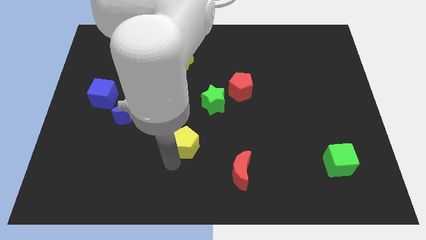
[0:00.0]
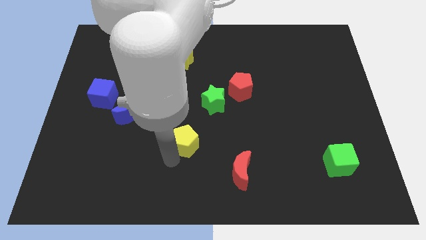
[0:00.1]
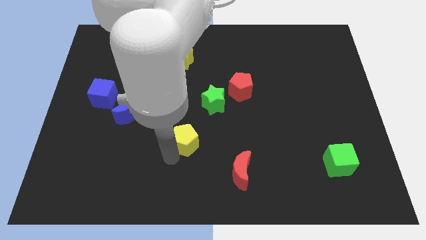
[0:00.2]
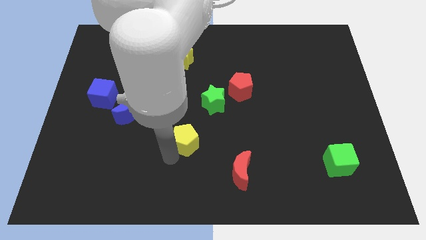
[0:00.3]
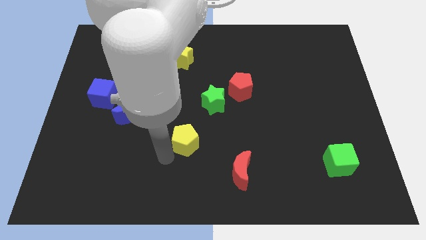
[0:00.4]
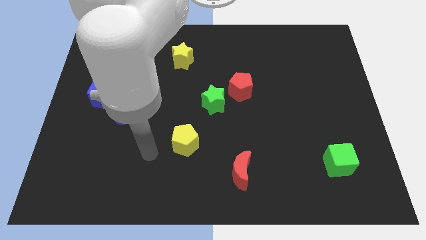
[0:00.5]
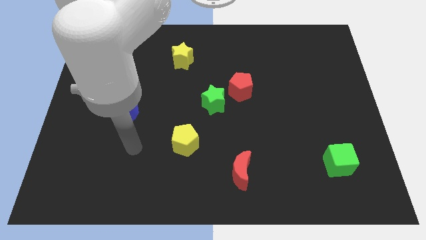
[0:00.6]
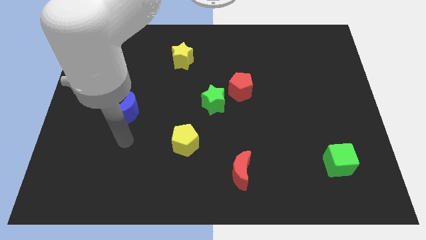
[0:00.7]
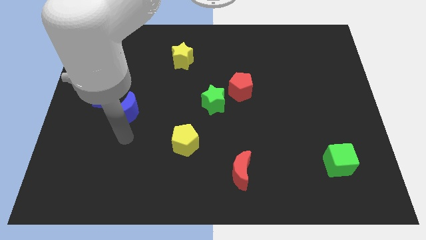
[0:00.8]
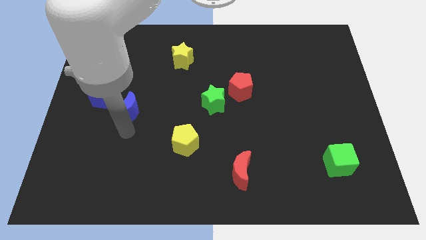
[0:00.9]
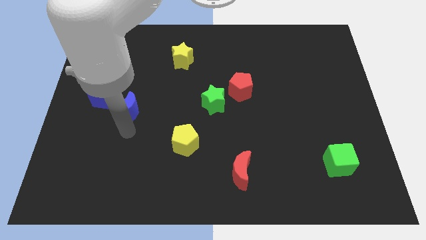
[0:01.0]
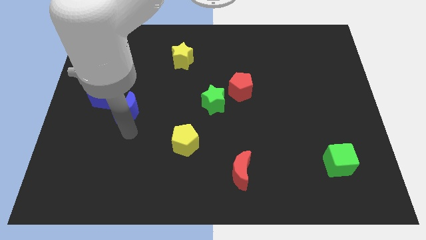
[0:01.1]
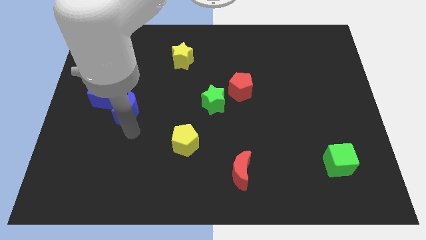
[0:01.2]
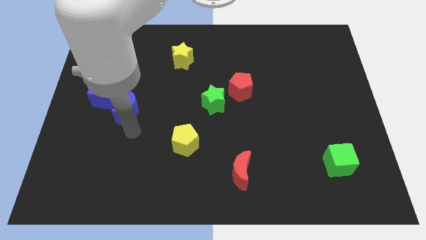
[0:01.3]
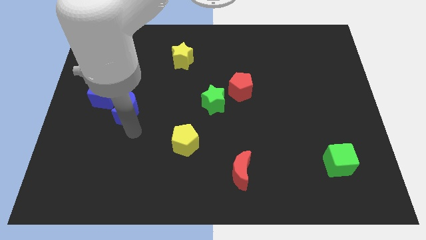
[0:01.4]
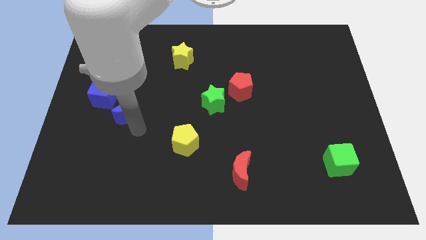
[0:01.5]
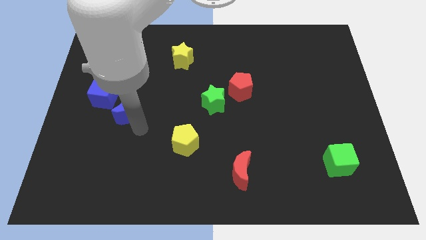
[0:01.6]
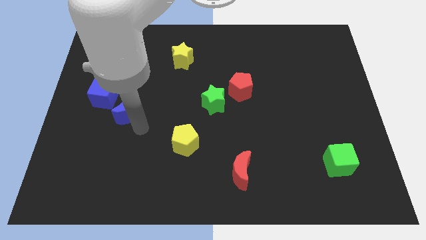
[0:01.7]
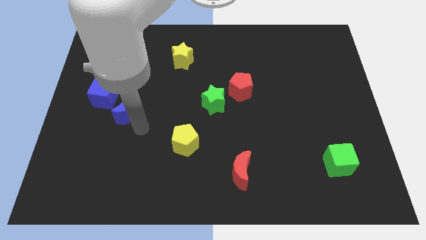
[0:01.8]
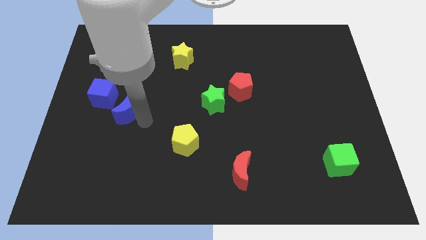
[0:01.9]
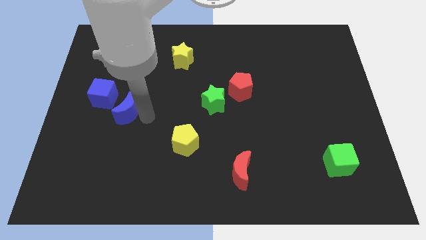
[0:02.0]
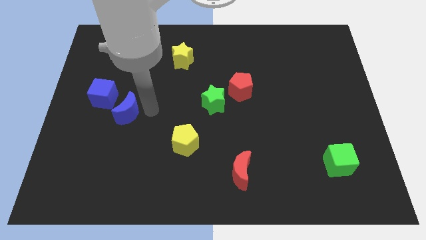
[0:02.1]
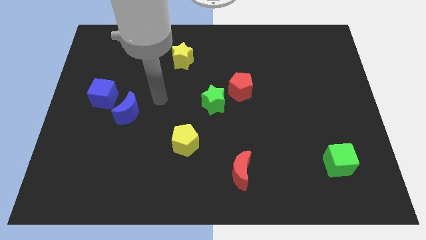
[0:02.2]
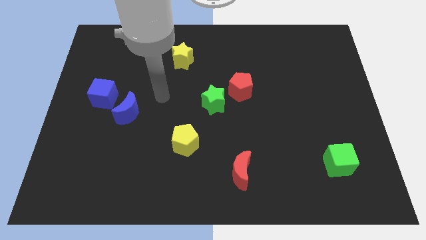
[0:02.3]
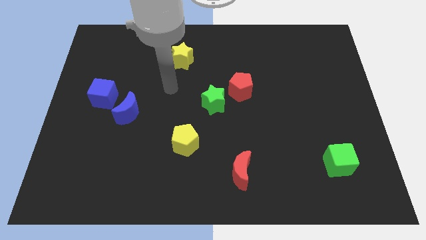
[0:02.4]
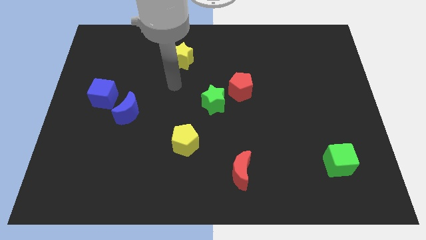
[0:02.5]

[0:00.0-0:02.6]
slightly touch the yellow pentagon at the bottom

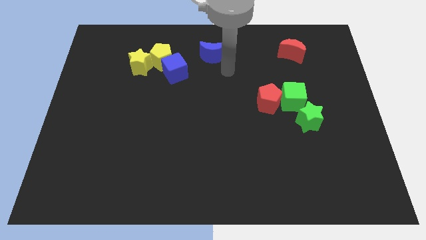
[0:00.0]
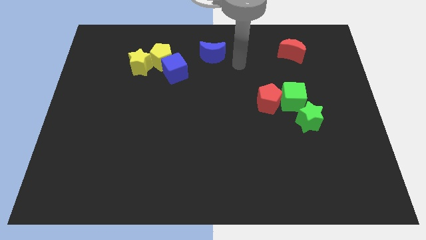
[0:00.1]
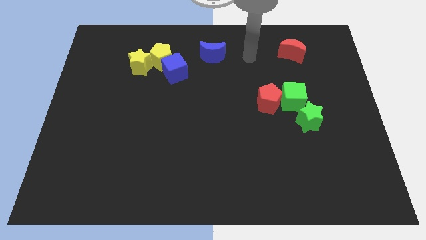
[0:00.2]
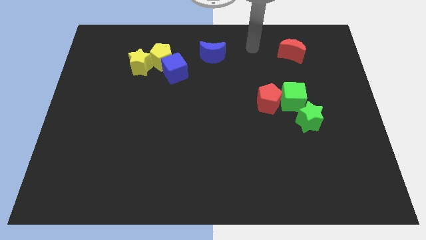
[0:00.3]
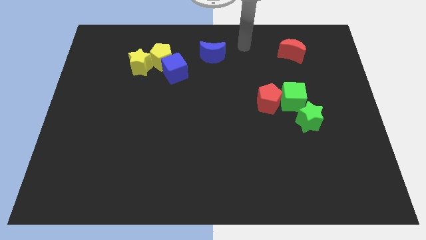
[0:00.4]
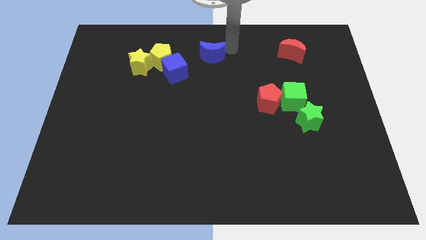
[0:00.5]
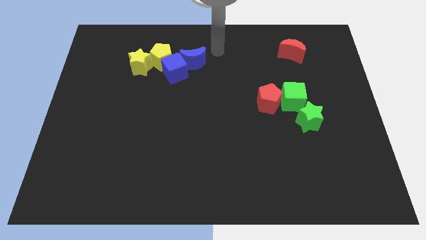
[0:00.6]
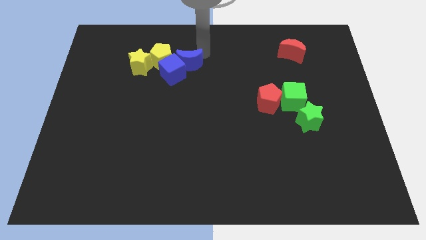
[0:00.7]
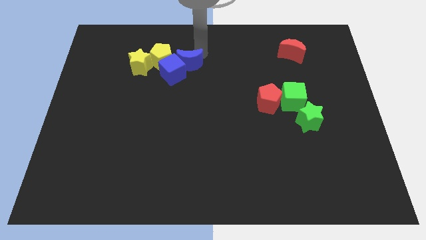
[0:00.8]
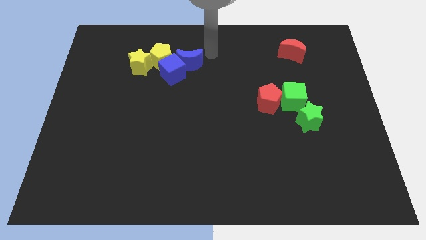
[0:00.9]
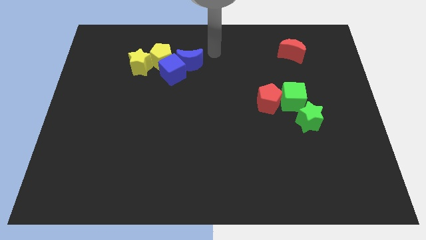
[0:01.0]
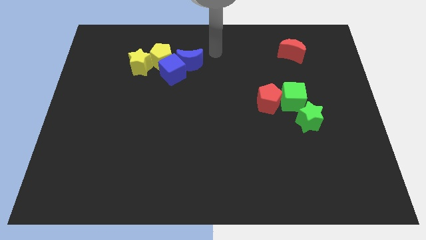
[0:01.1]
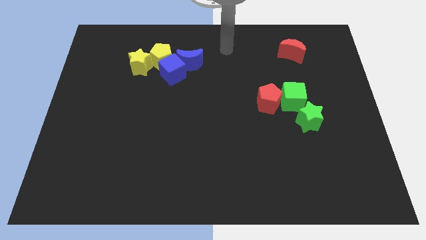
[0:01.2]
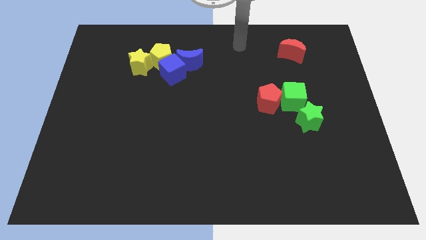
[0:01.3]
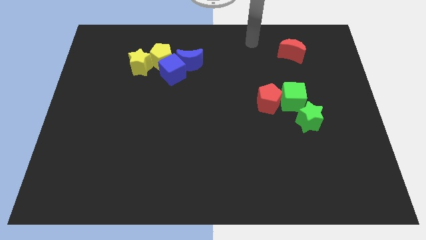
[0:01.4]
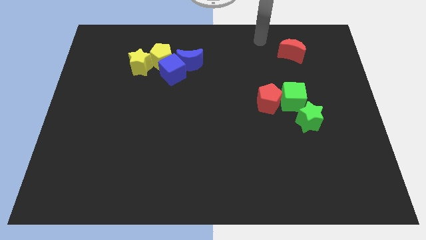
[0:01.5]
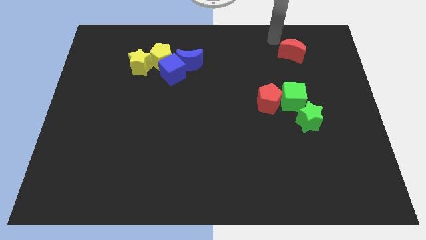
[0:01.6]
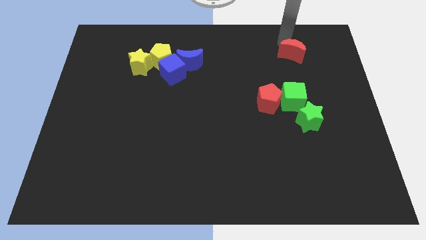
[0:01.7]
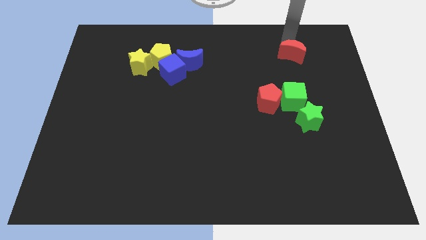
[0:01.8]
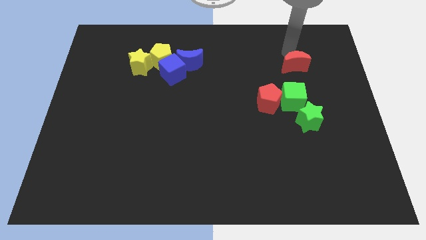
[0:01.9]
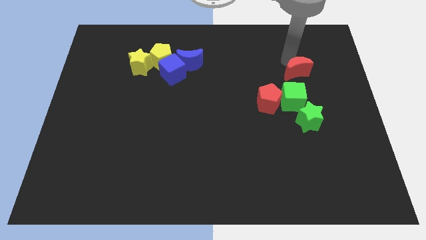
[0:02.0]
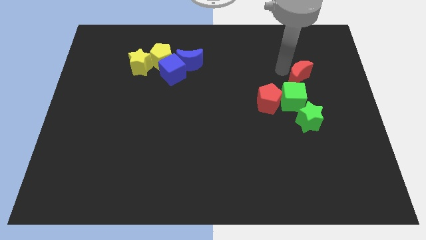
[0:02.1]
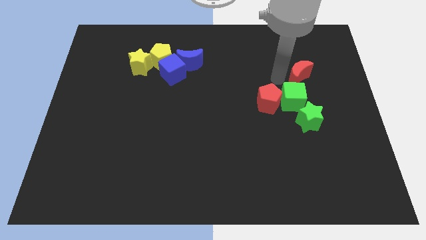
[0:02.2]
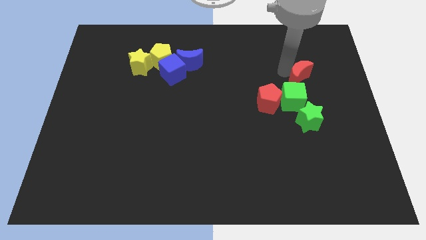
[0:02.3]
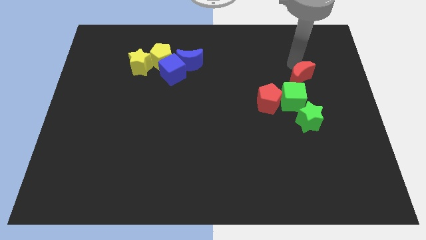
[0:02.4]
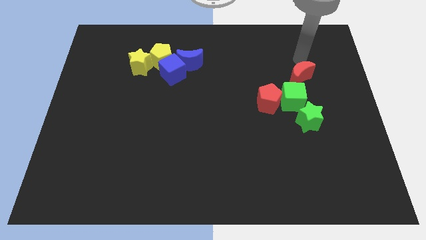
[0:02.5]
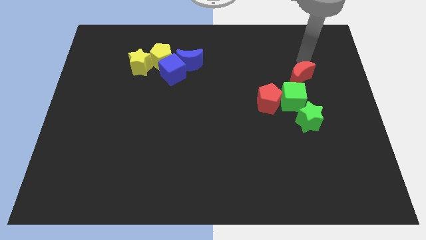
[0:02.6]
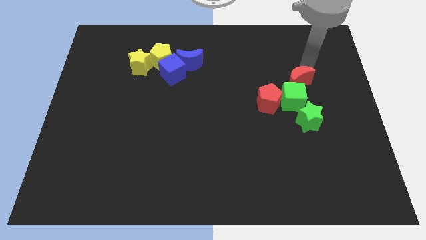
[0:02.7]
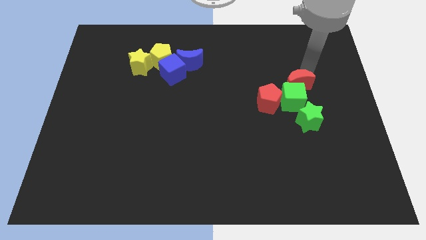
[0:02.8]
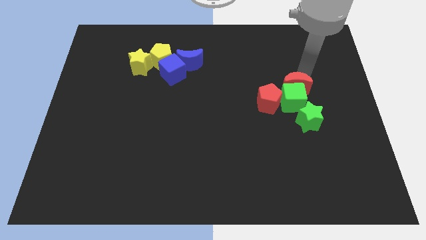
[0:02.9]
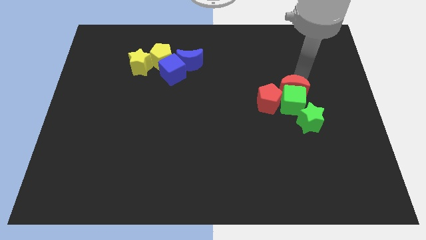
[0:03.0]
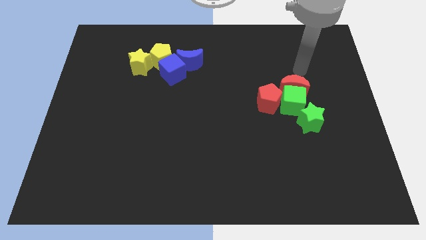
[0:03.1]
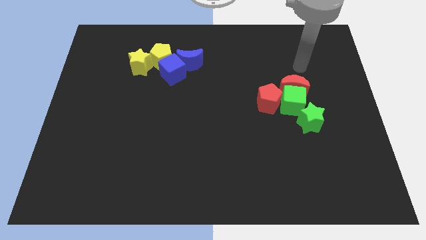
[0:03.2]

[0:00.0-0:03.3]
push the blue crescent into the blue cube while the red crescent into the green cube

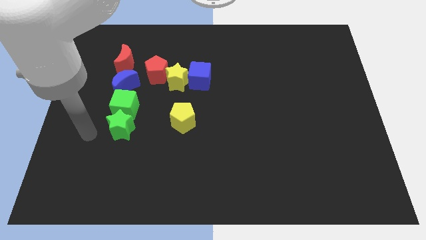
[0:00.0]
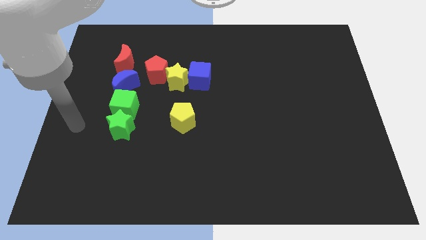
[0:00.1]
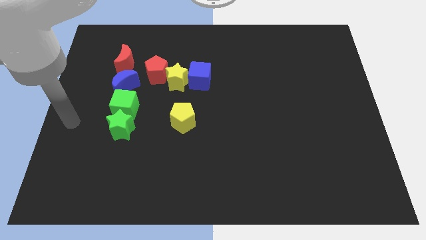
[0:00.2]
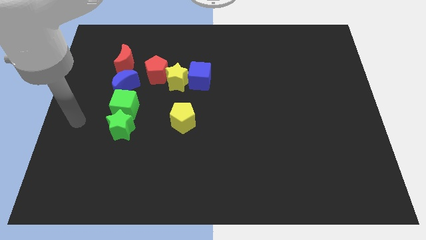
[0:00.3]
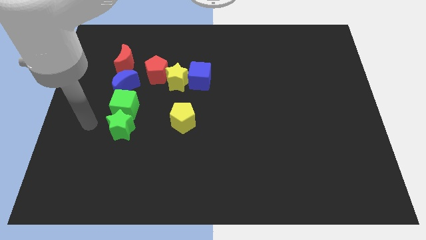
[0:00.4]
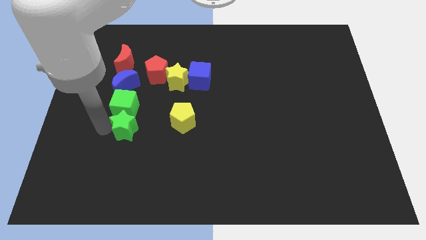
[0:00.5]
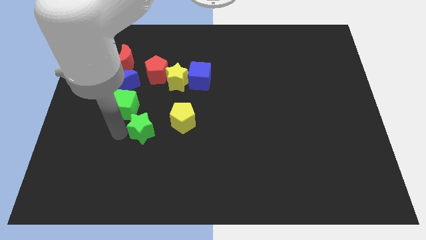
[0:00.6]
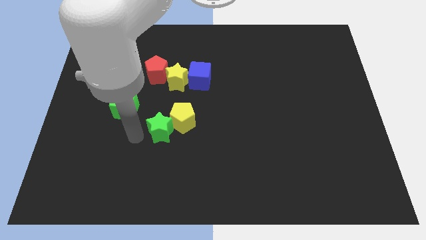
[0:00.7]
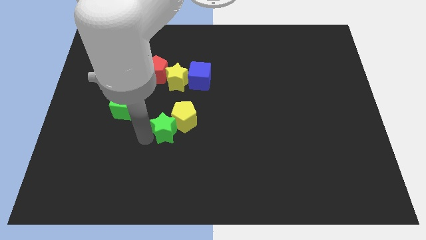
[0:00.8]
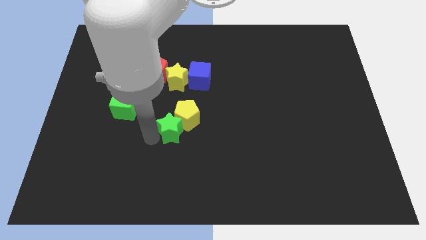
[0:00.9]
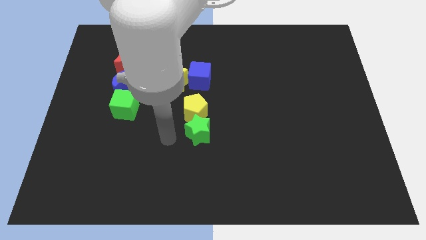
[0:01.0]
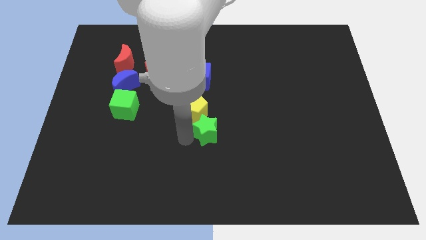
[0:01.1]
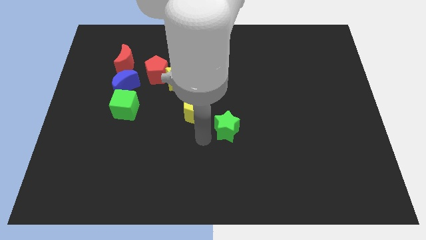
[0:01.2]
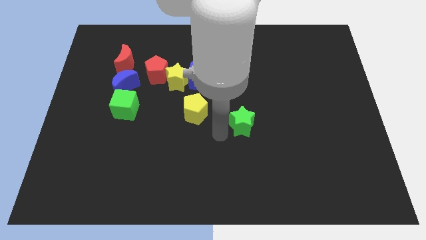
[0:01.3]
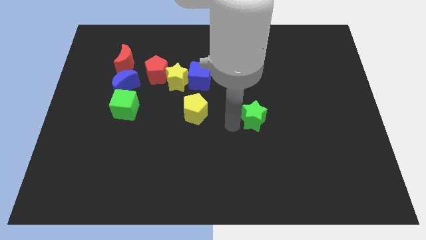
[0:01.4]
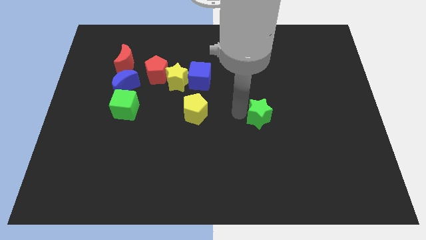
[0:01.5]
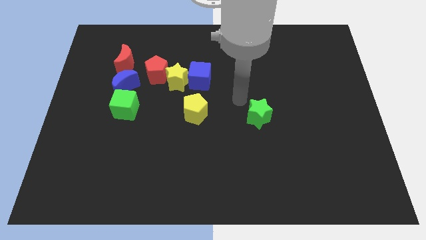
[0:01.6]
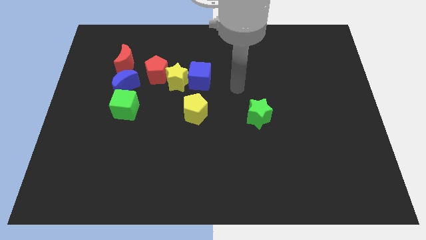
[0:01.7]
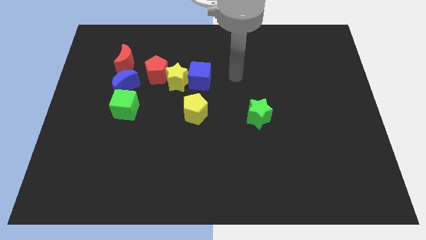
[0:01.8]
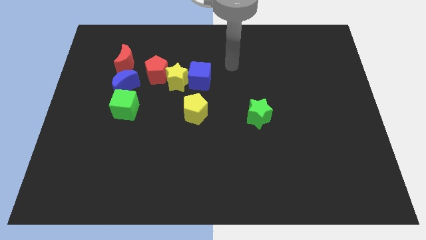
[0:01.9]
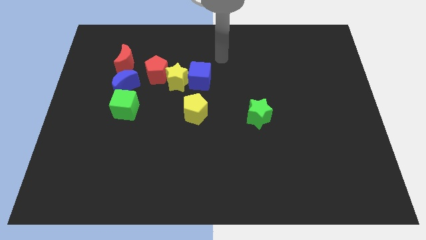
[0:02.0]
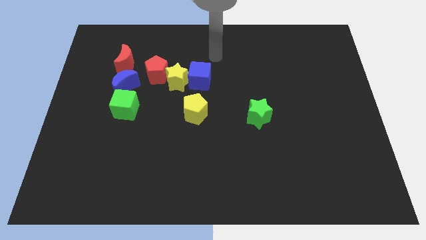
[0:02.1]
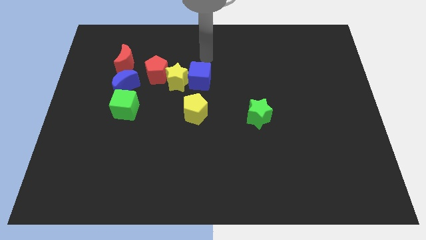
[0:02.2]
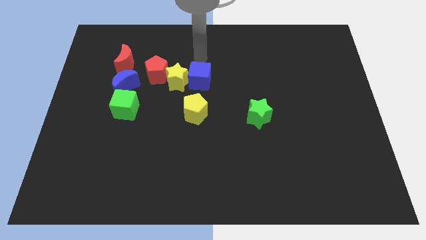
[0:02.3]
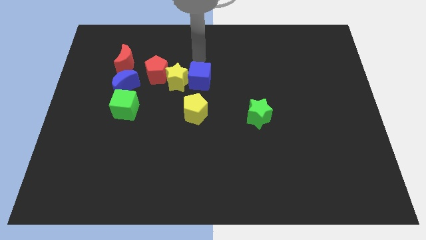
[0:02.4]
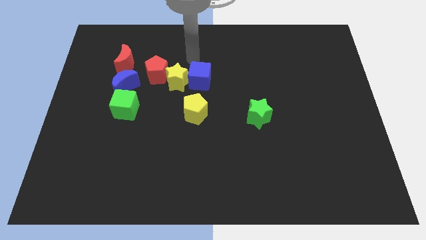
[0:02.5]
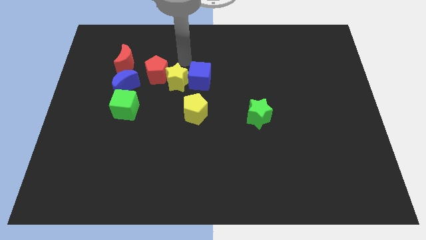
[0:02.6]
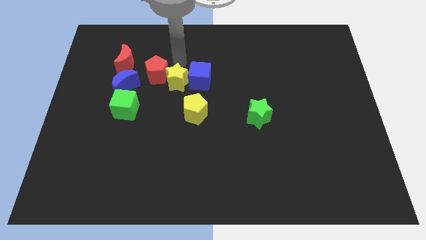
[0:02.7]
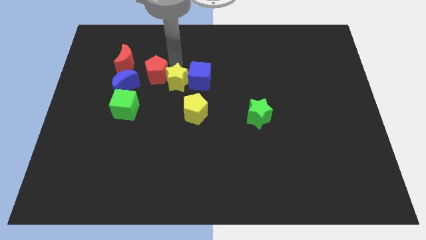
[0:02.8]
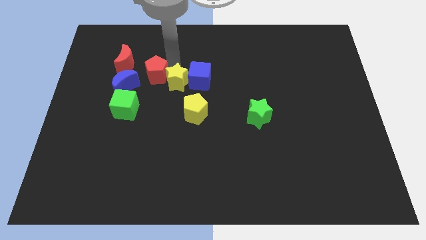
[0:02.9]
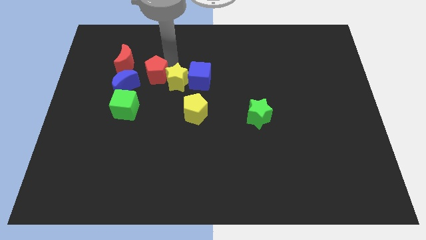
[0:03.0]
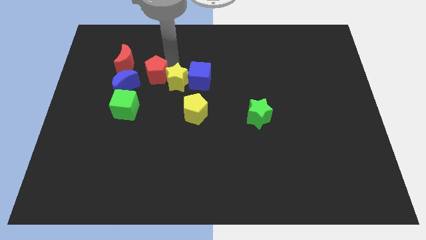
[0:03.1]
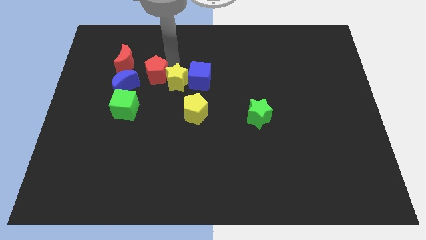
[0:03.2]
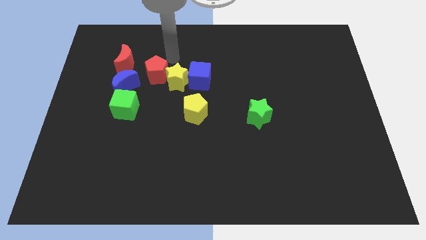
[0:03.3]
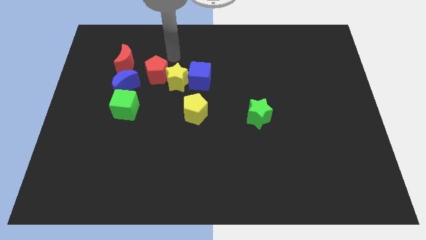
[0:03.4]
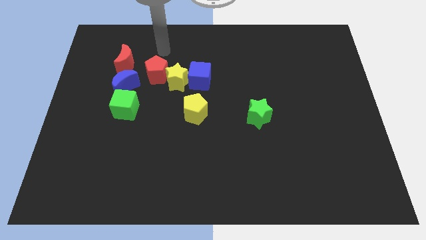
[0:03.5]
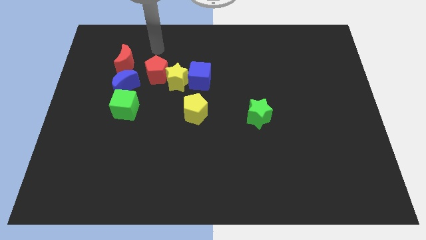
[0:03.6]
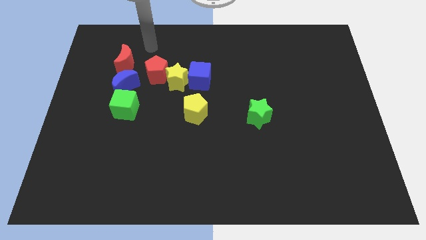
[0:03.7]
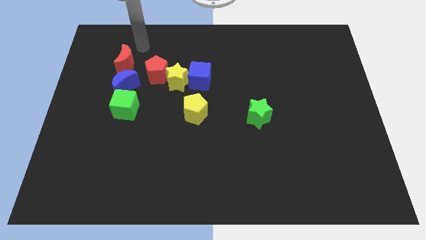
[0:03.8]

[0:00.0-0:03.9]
push the green star to the right
